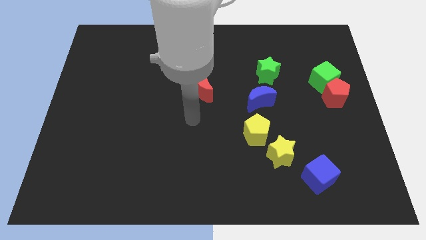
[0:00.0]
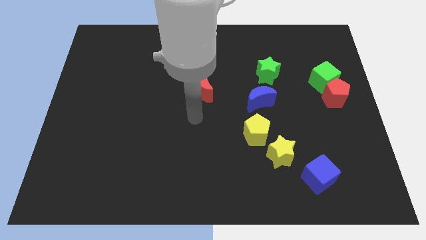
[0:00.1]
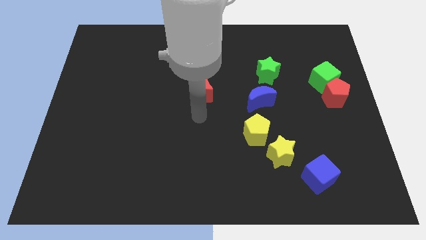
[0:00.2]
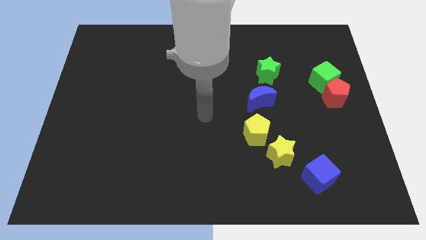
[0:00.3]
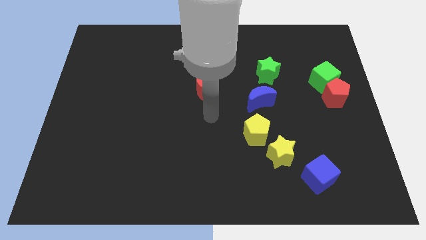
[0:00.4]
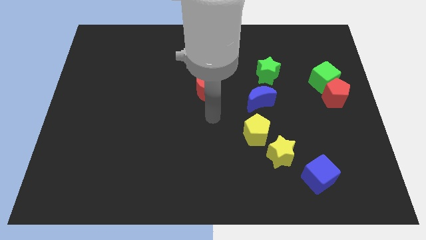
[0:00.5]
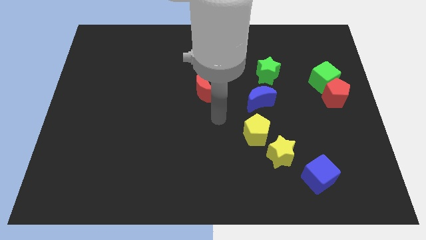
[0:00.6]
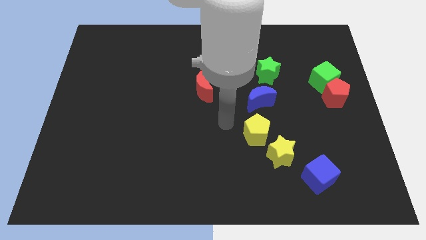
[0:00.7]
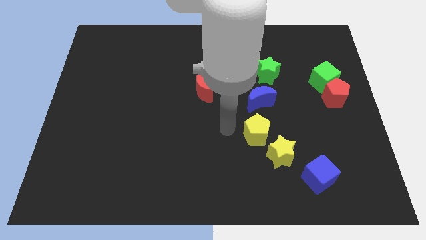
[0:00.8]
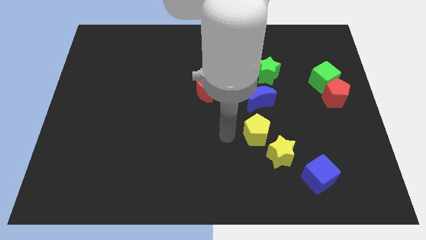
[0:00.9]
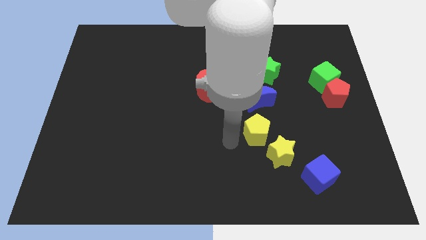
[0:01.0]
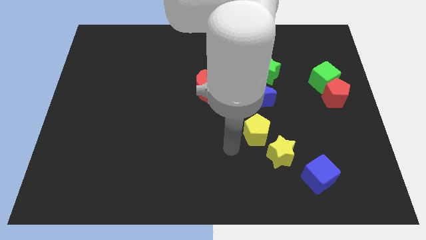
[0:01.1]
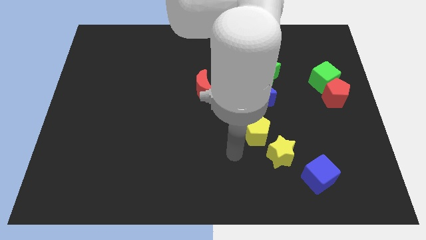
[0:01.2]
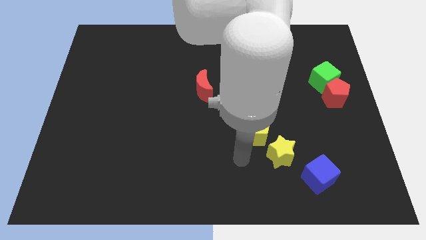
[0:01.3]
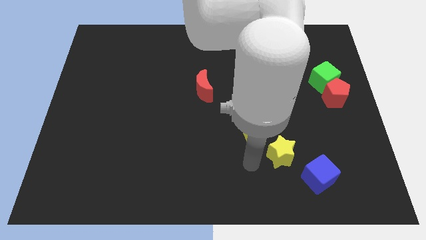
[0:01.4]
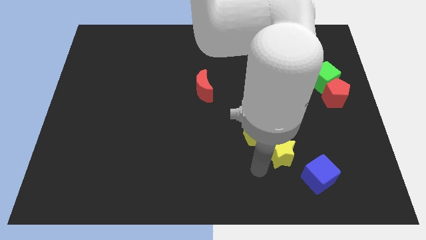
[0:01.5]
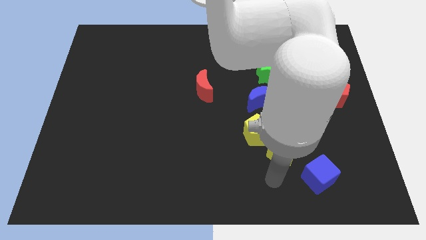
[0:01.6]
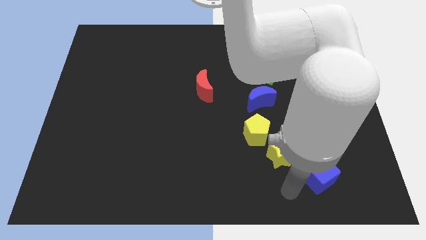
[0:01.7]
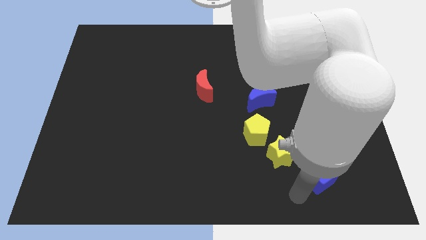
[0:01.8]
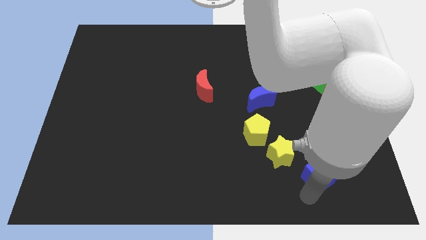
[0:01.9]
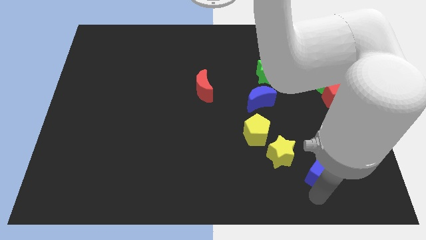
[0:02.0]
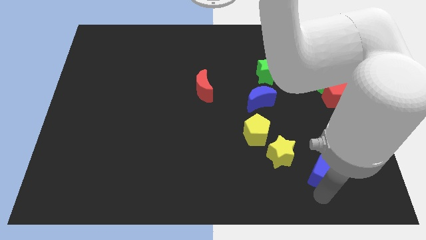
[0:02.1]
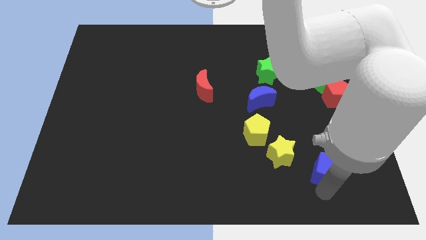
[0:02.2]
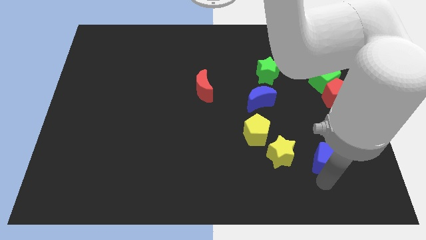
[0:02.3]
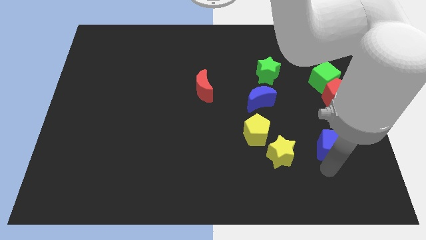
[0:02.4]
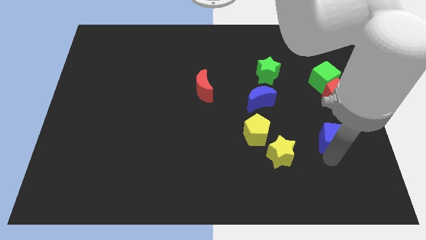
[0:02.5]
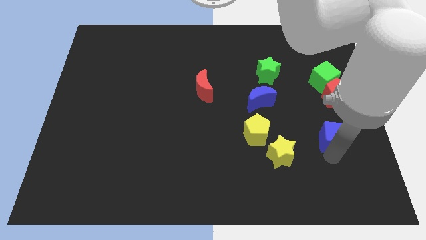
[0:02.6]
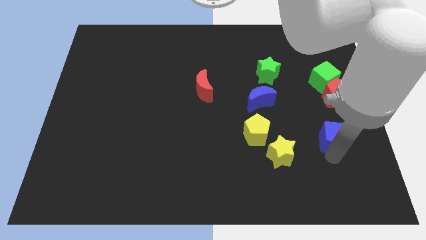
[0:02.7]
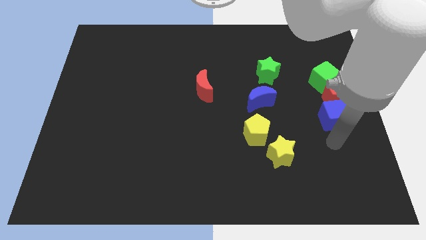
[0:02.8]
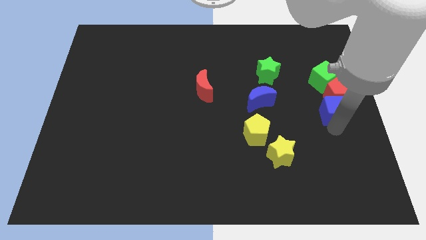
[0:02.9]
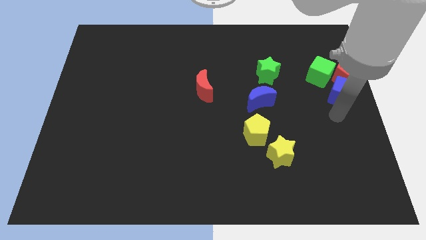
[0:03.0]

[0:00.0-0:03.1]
push the blue cube into the red pentagon

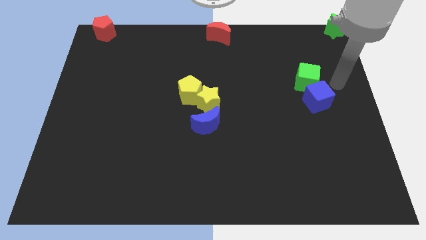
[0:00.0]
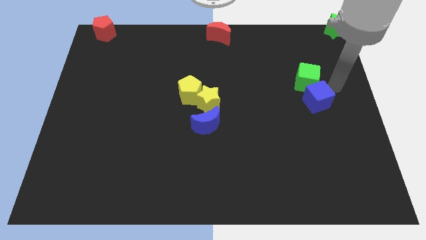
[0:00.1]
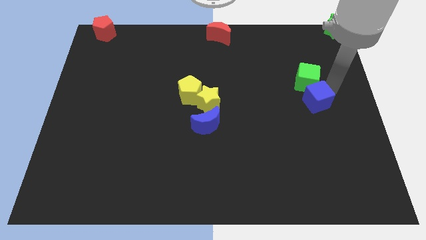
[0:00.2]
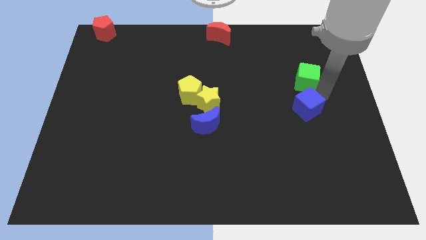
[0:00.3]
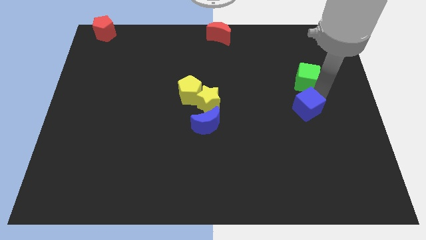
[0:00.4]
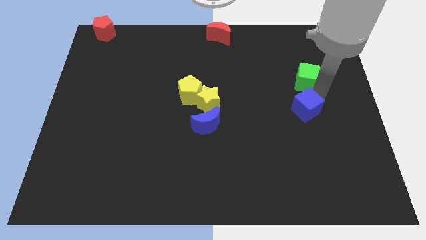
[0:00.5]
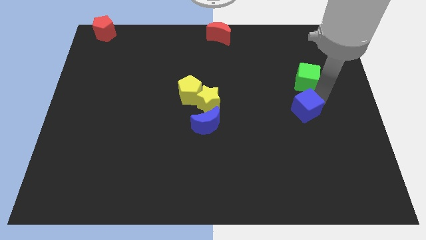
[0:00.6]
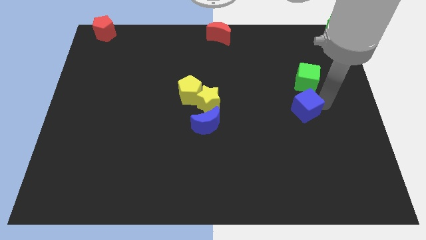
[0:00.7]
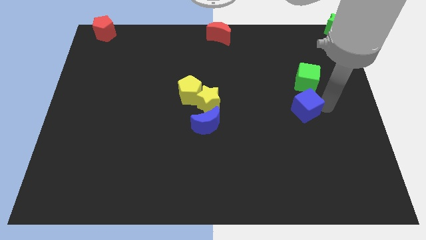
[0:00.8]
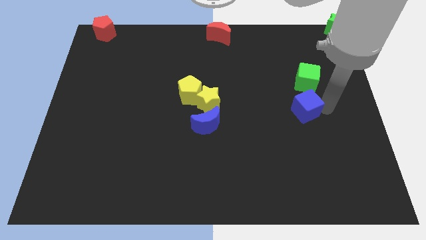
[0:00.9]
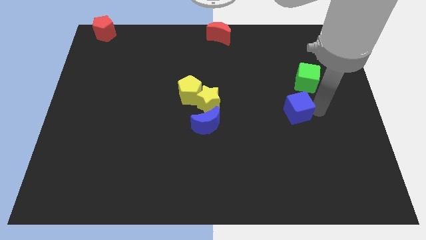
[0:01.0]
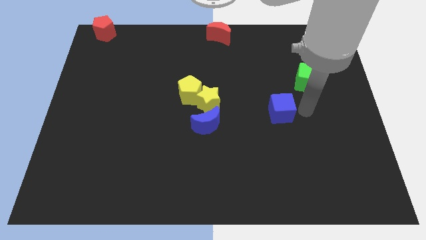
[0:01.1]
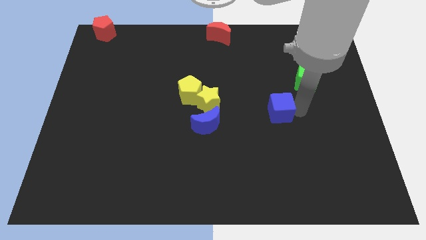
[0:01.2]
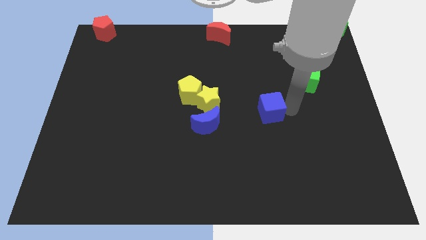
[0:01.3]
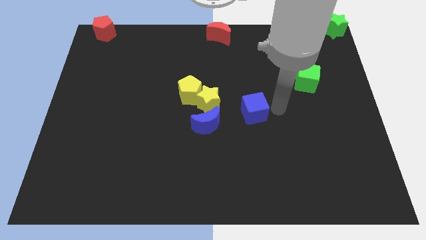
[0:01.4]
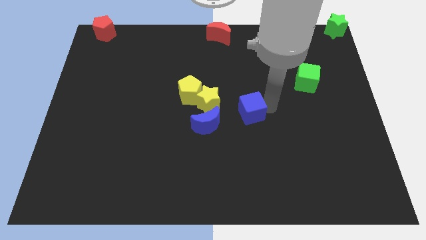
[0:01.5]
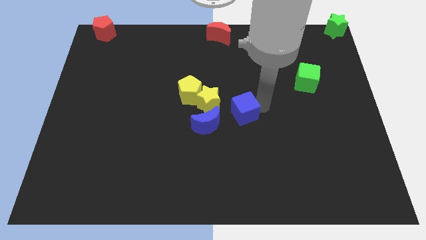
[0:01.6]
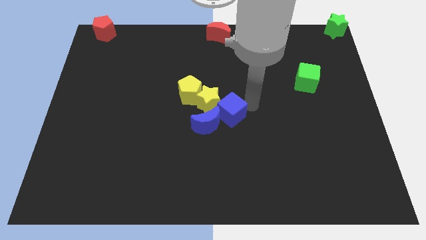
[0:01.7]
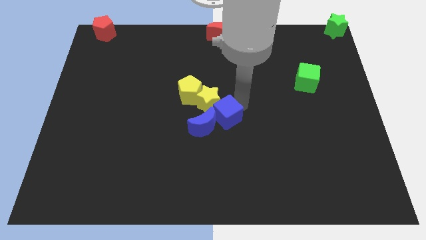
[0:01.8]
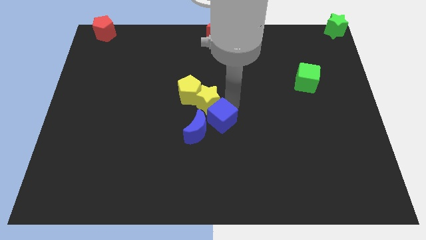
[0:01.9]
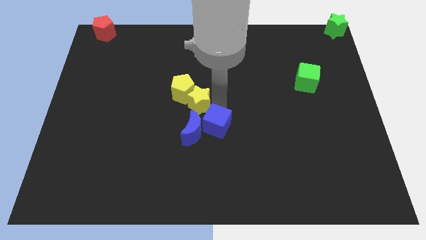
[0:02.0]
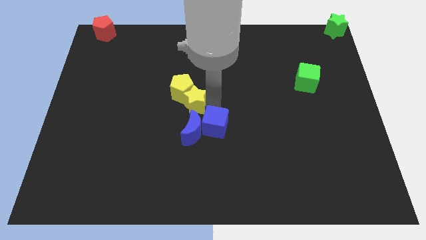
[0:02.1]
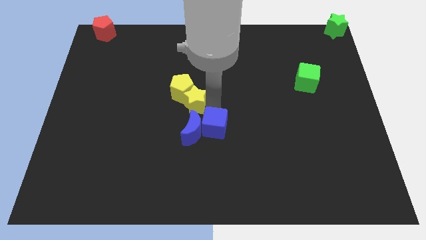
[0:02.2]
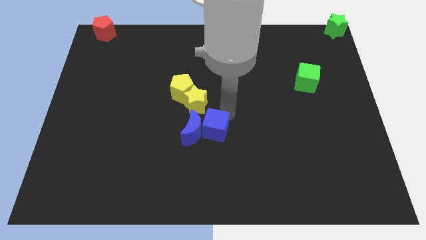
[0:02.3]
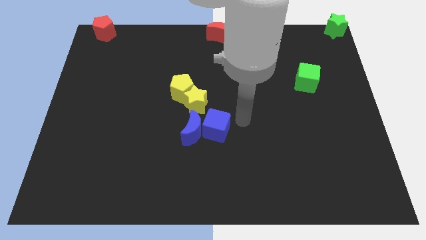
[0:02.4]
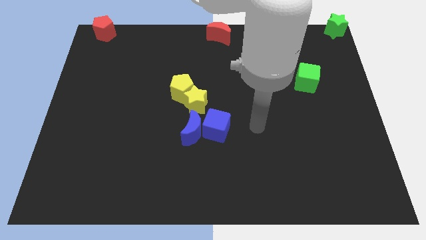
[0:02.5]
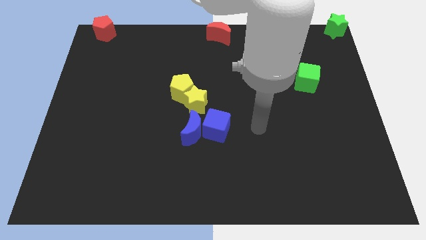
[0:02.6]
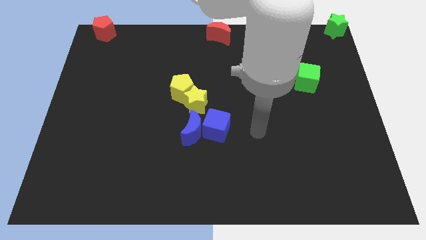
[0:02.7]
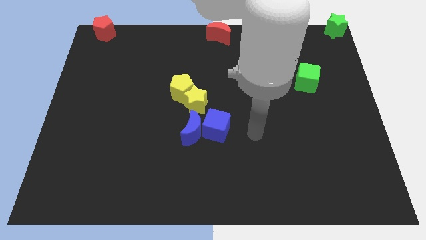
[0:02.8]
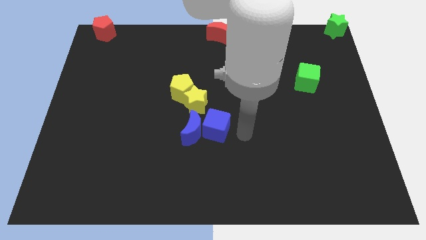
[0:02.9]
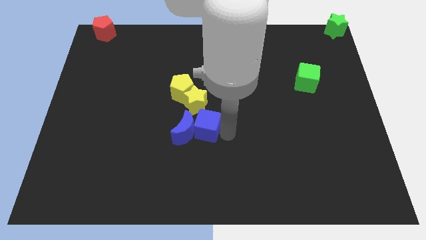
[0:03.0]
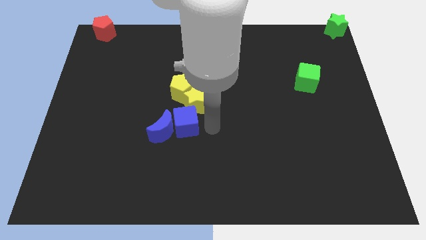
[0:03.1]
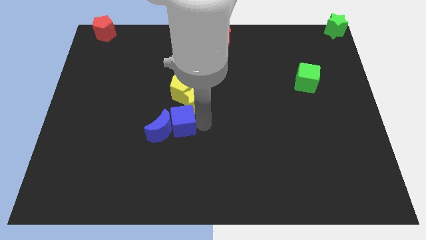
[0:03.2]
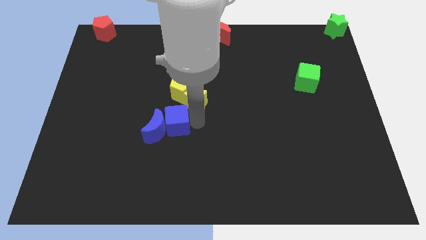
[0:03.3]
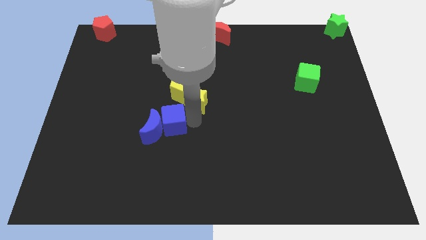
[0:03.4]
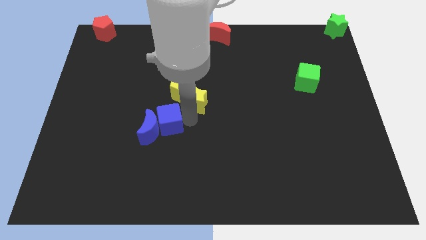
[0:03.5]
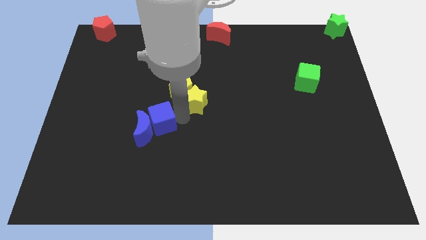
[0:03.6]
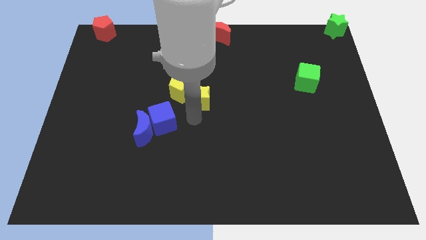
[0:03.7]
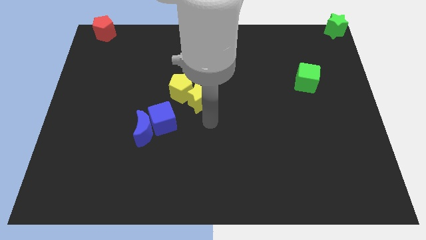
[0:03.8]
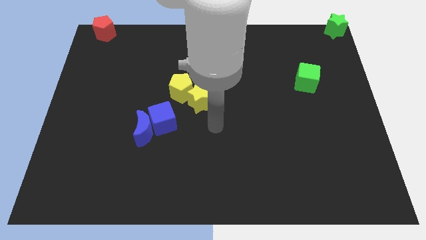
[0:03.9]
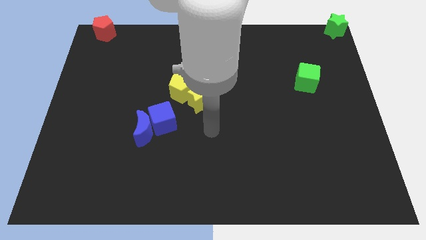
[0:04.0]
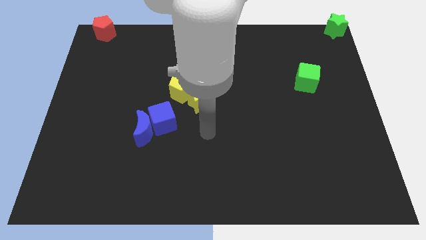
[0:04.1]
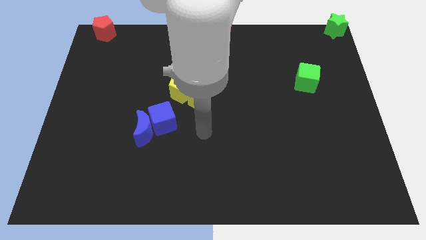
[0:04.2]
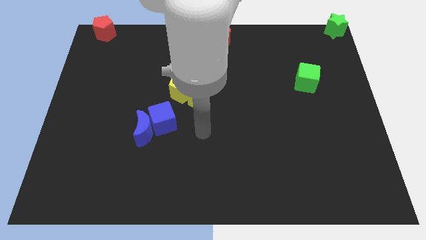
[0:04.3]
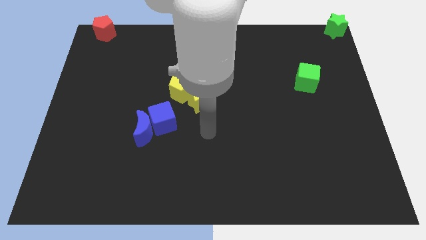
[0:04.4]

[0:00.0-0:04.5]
push the blue cube into the blue moon

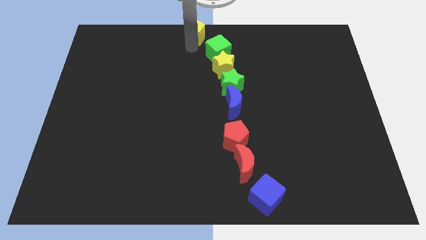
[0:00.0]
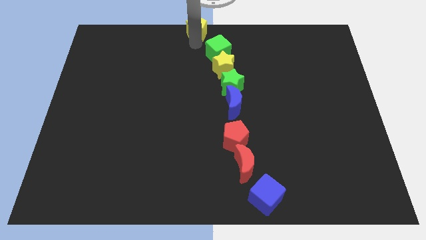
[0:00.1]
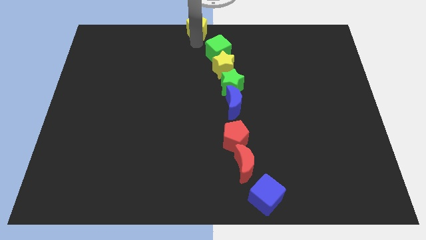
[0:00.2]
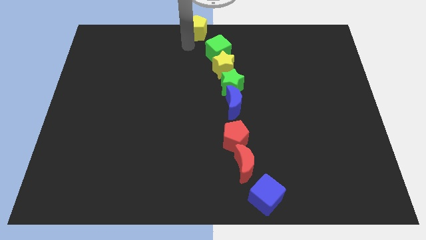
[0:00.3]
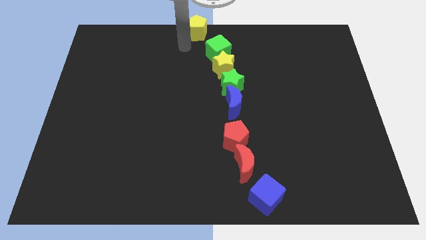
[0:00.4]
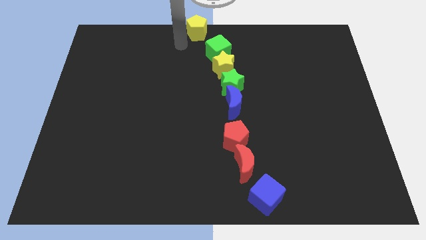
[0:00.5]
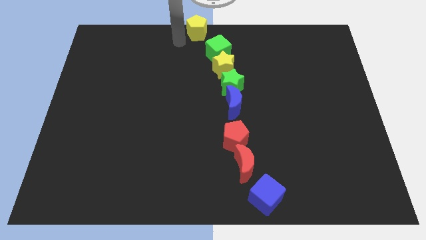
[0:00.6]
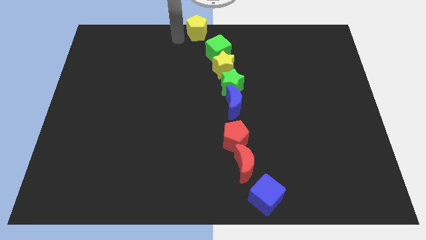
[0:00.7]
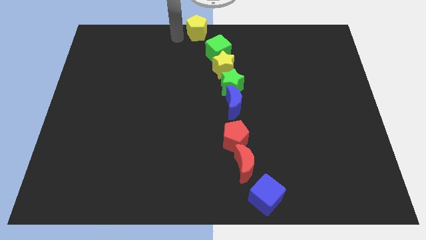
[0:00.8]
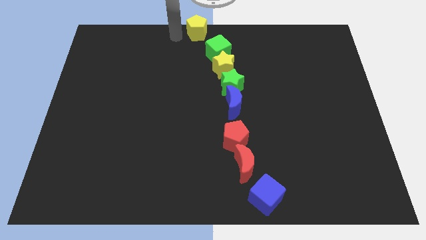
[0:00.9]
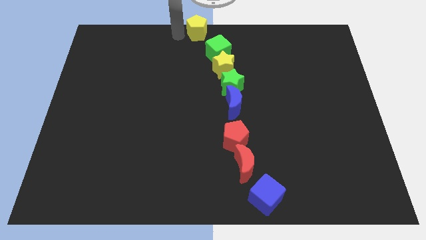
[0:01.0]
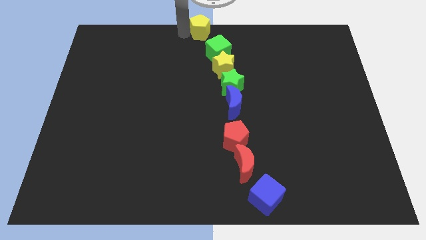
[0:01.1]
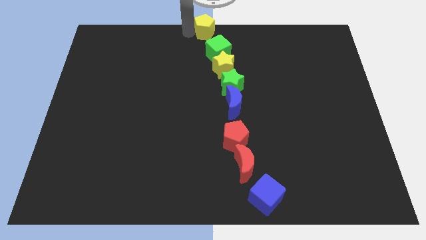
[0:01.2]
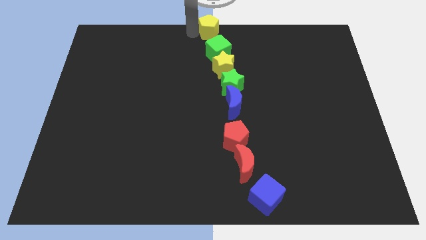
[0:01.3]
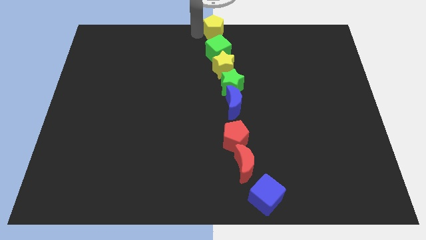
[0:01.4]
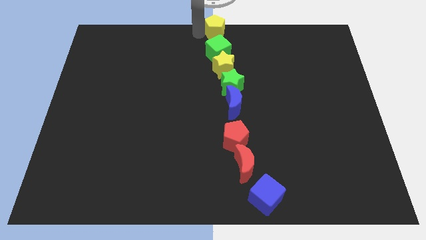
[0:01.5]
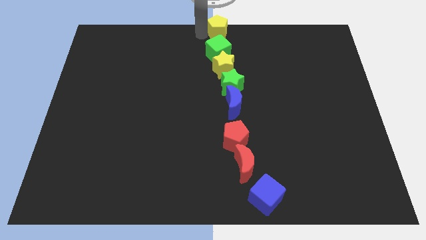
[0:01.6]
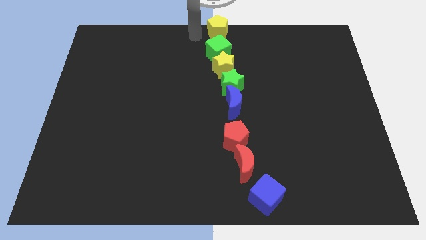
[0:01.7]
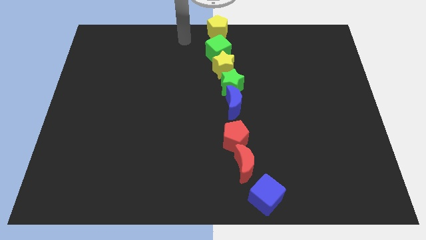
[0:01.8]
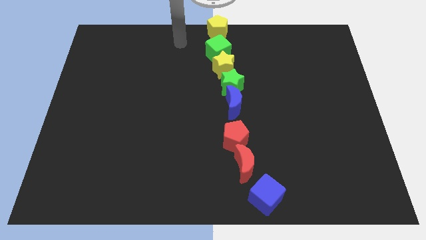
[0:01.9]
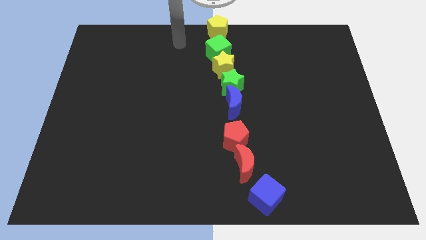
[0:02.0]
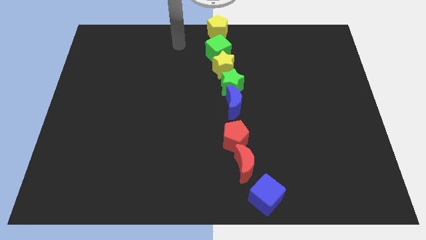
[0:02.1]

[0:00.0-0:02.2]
place the yellow pentagon at the top center above the green cube
